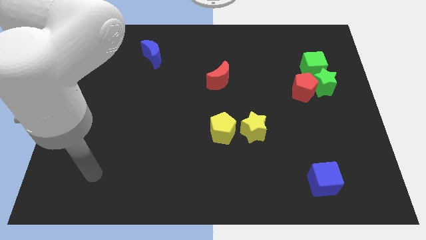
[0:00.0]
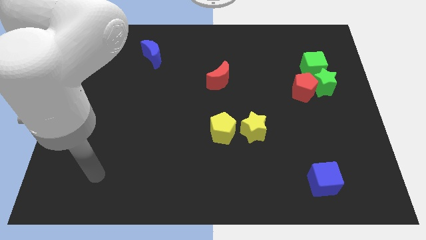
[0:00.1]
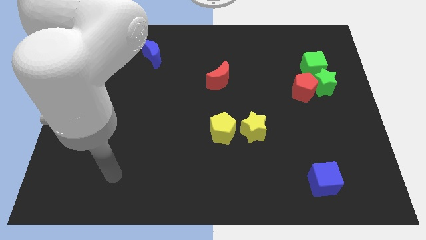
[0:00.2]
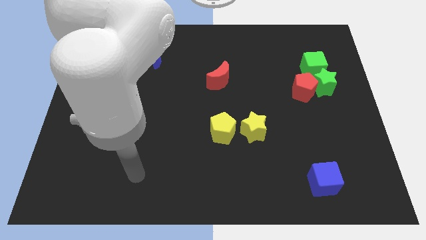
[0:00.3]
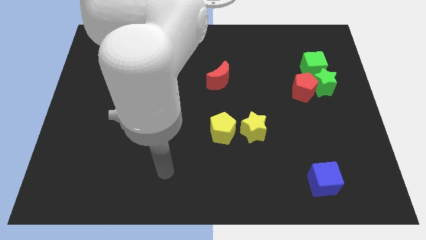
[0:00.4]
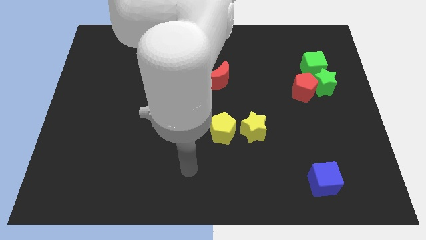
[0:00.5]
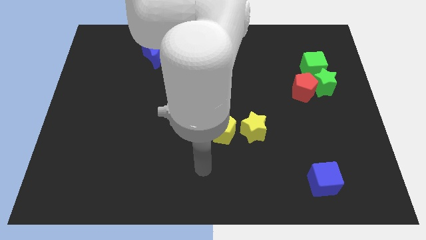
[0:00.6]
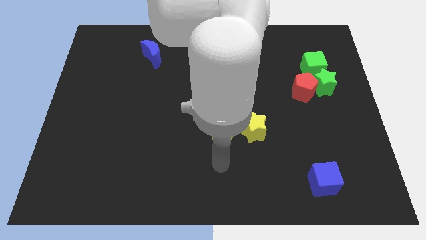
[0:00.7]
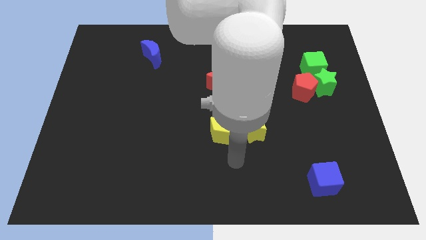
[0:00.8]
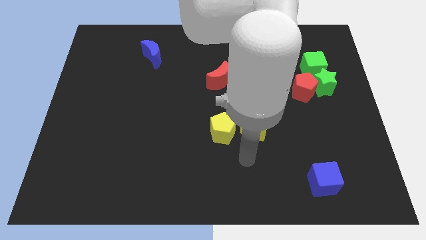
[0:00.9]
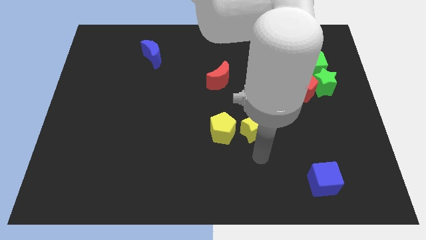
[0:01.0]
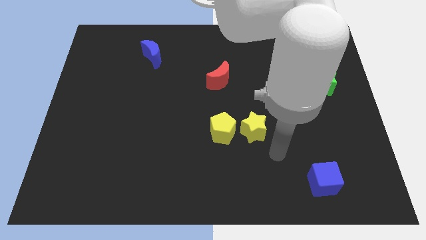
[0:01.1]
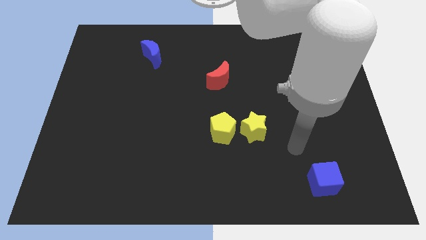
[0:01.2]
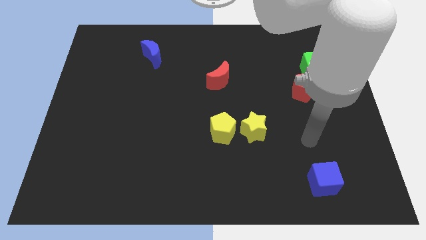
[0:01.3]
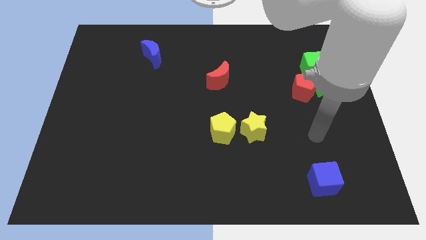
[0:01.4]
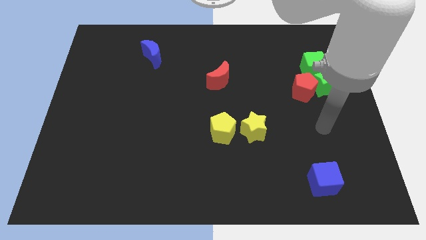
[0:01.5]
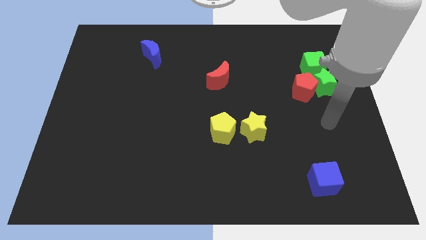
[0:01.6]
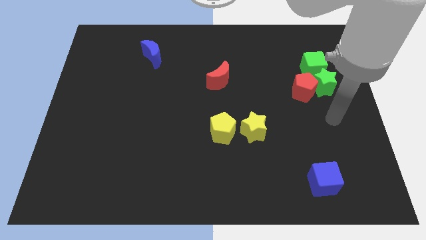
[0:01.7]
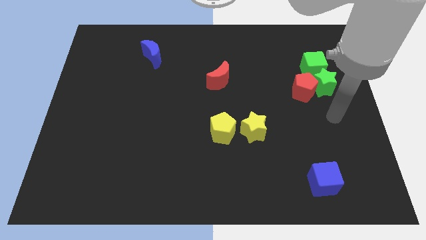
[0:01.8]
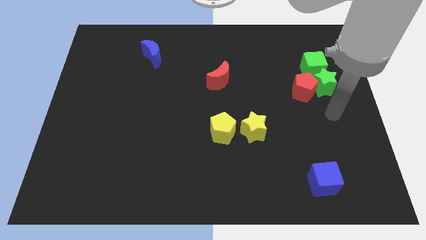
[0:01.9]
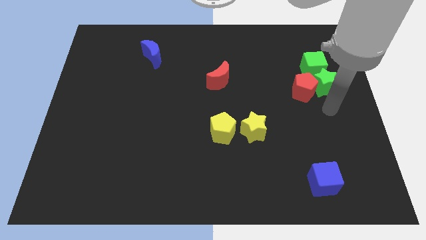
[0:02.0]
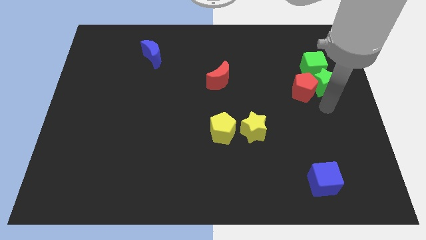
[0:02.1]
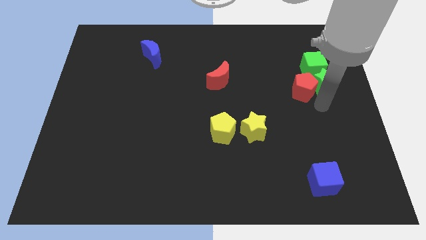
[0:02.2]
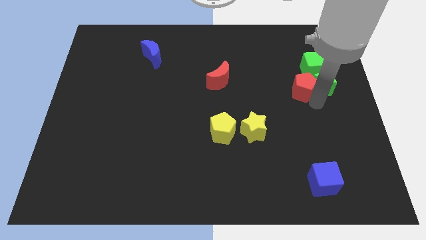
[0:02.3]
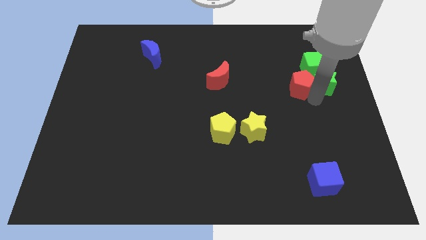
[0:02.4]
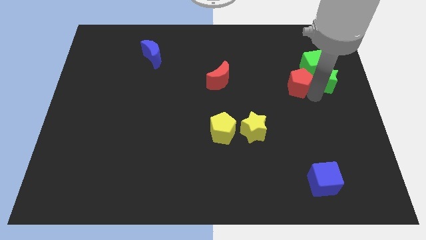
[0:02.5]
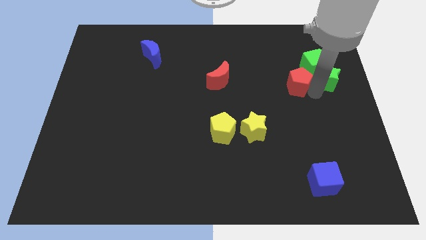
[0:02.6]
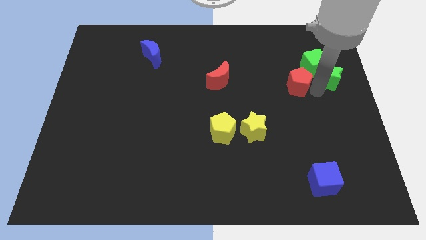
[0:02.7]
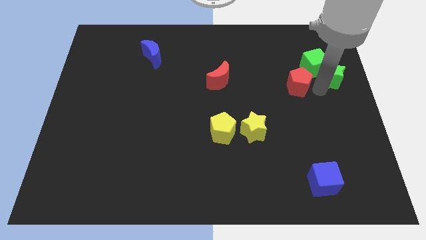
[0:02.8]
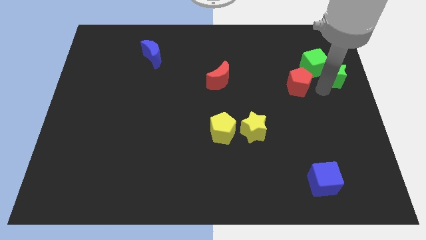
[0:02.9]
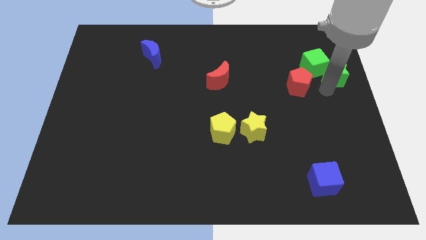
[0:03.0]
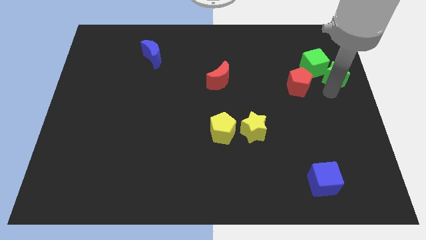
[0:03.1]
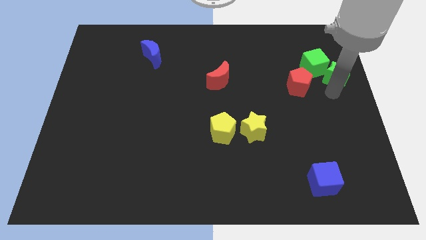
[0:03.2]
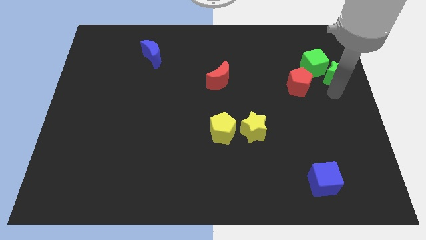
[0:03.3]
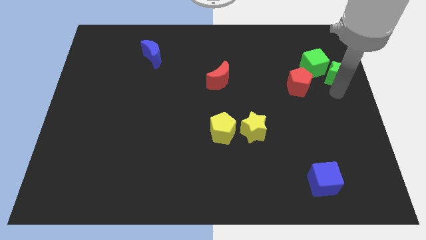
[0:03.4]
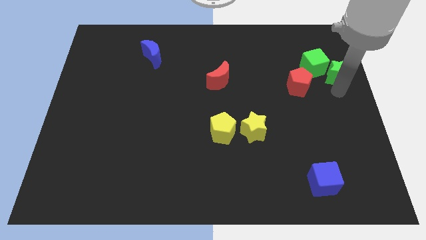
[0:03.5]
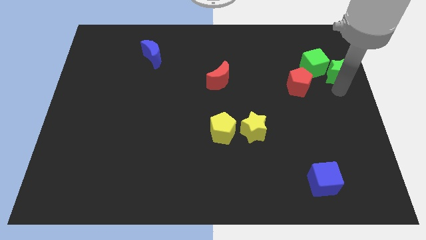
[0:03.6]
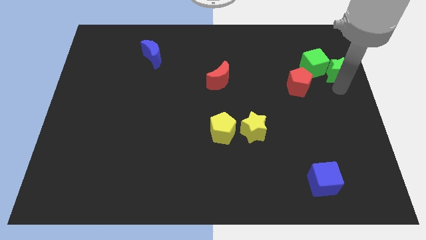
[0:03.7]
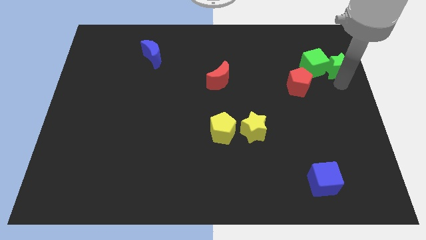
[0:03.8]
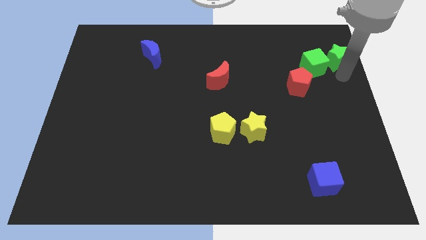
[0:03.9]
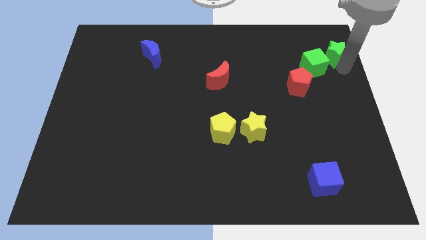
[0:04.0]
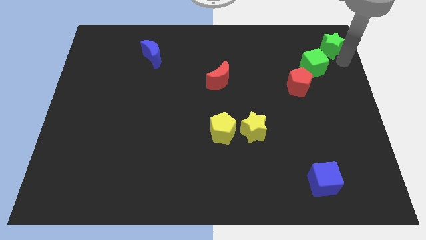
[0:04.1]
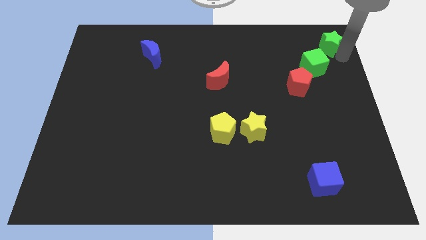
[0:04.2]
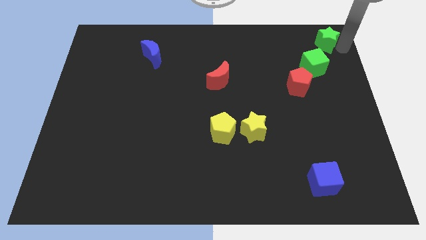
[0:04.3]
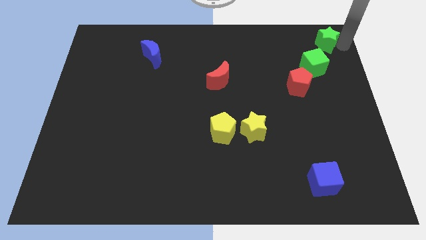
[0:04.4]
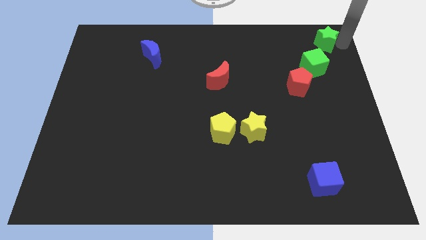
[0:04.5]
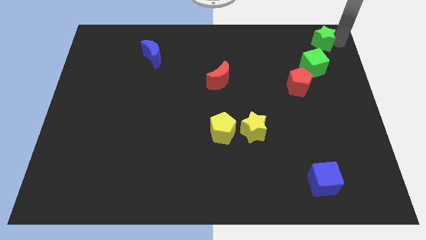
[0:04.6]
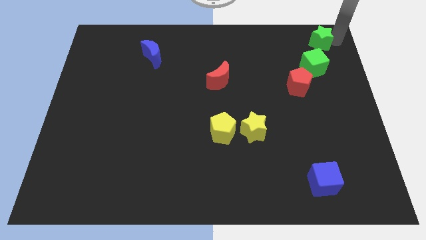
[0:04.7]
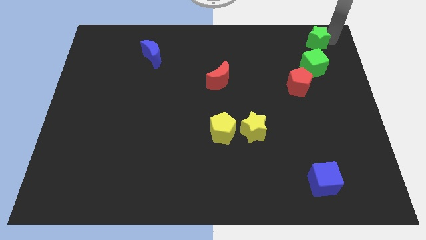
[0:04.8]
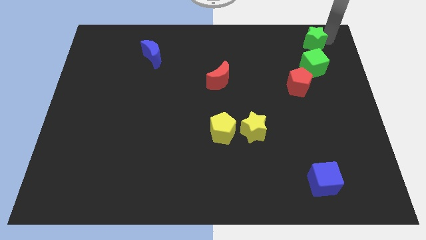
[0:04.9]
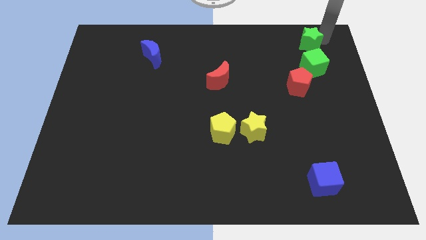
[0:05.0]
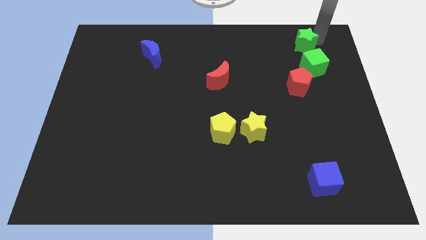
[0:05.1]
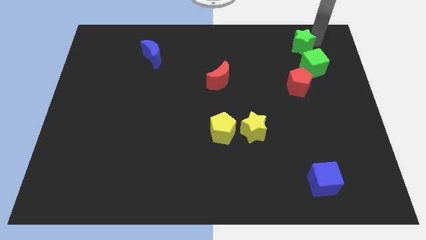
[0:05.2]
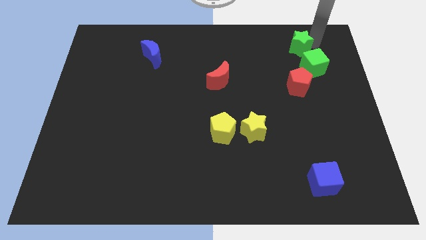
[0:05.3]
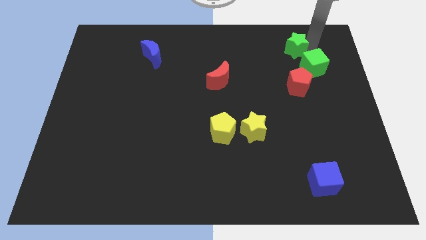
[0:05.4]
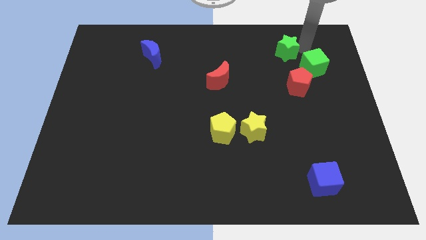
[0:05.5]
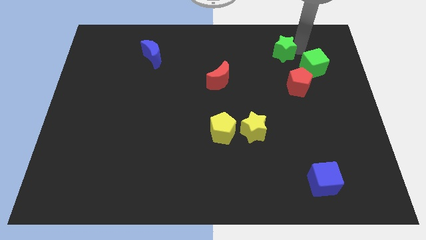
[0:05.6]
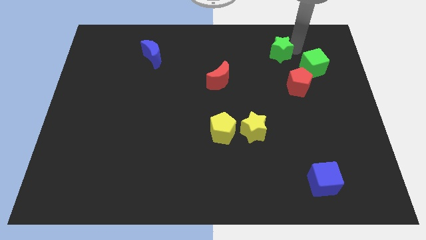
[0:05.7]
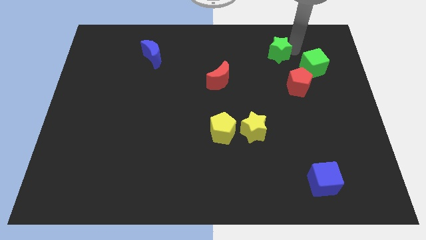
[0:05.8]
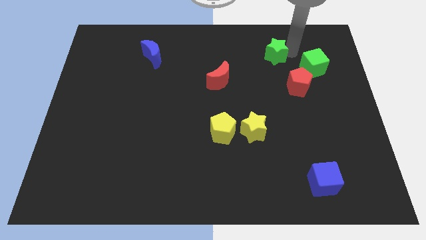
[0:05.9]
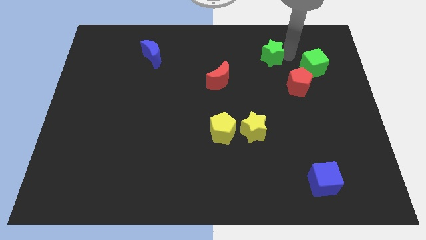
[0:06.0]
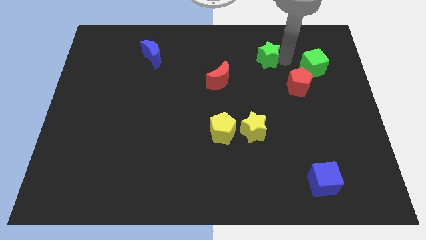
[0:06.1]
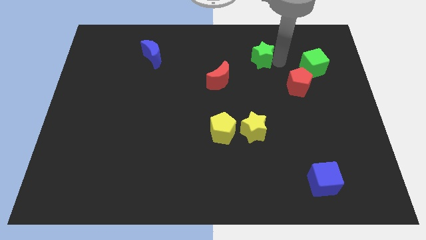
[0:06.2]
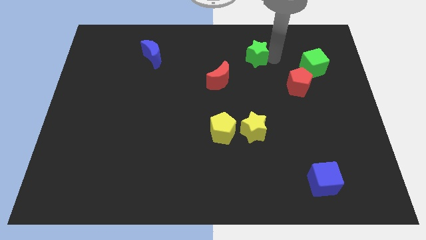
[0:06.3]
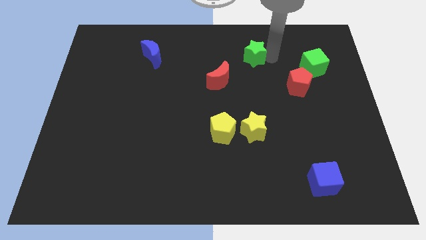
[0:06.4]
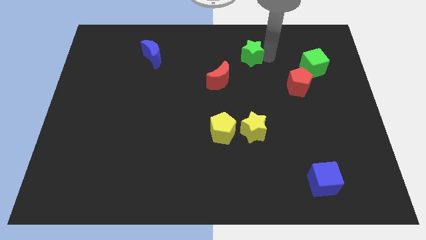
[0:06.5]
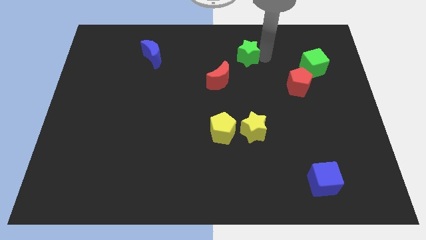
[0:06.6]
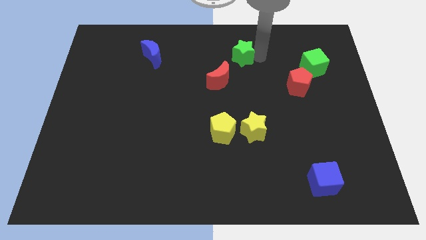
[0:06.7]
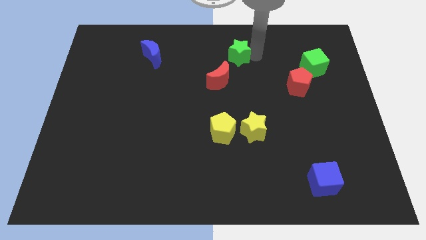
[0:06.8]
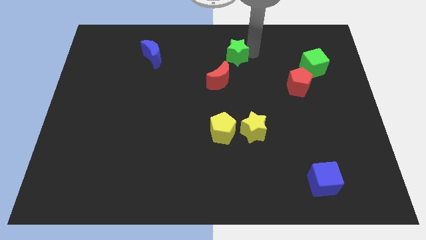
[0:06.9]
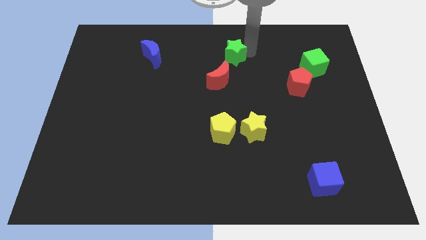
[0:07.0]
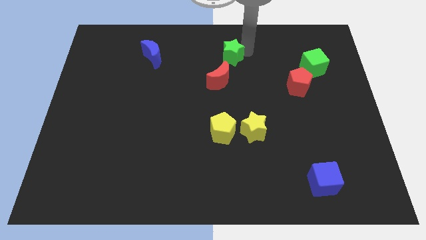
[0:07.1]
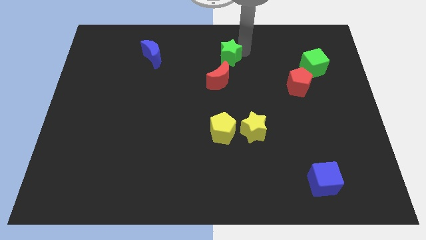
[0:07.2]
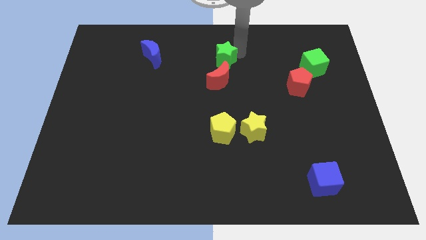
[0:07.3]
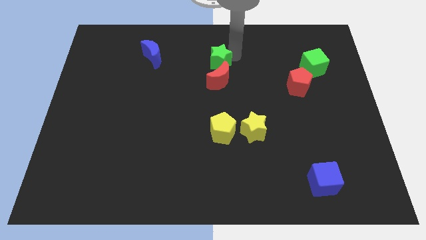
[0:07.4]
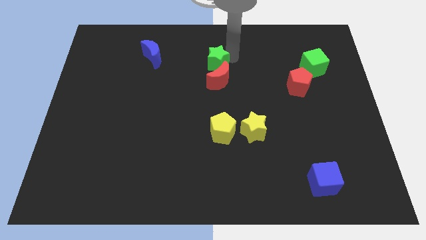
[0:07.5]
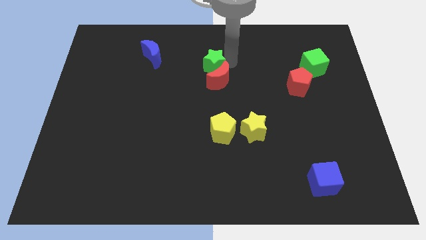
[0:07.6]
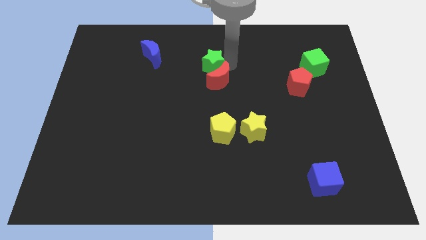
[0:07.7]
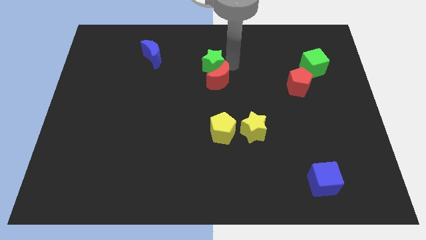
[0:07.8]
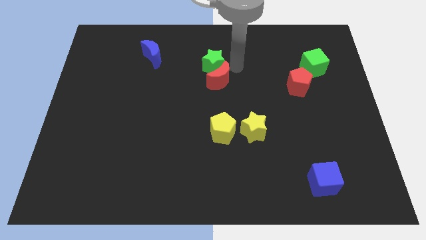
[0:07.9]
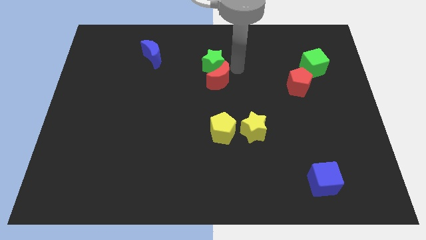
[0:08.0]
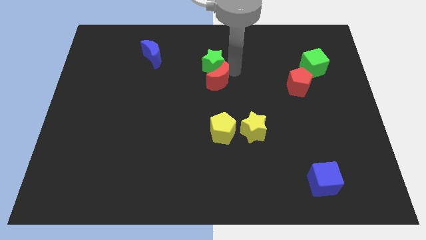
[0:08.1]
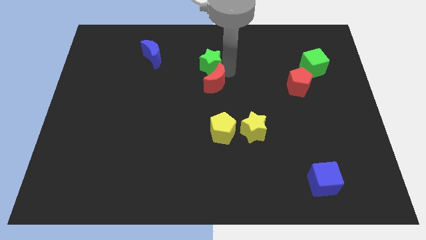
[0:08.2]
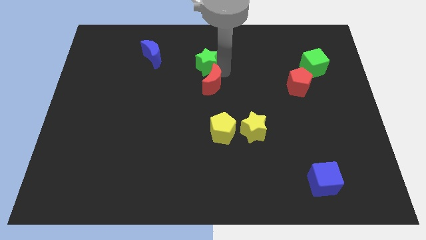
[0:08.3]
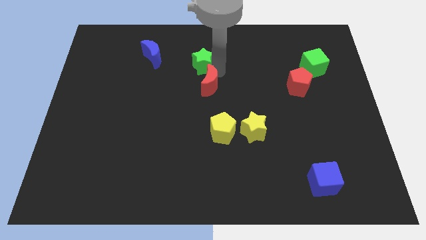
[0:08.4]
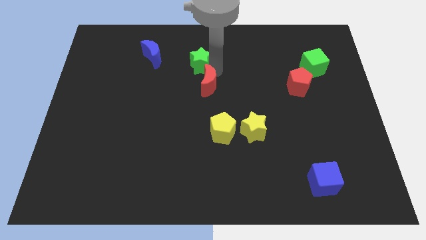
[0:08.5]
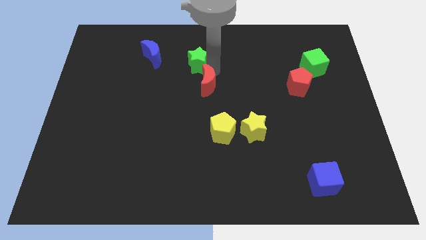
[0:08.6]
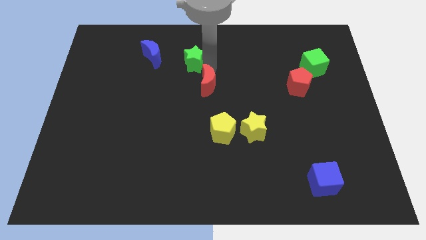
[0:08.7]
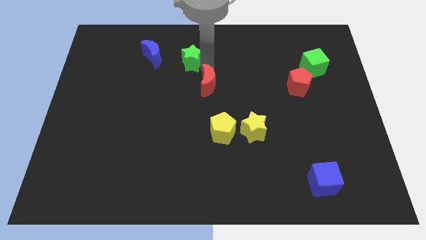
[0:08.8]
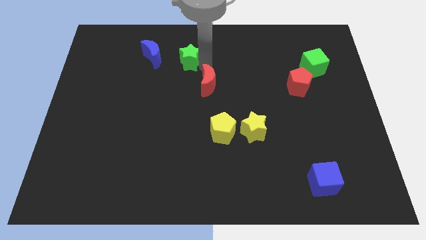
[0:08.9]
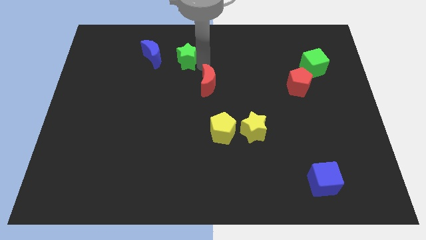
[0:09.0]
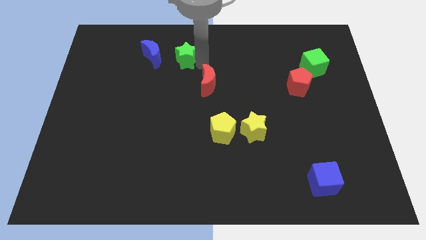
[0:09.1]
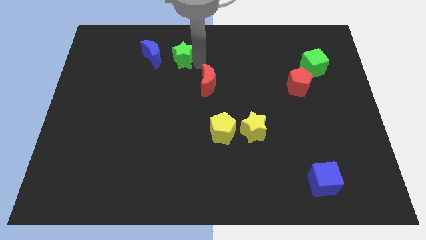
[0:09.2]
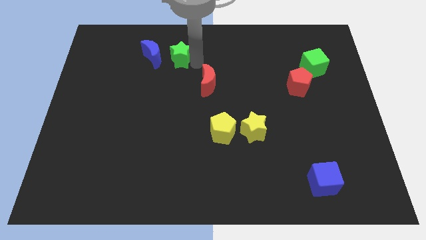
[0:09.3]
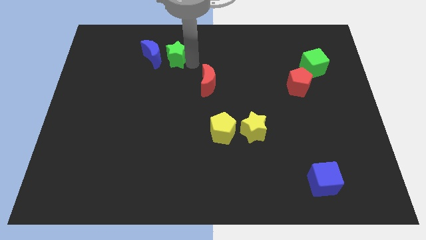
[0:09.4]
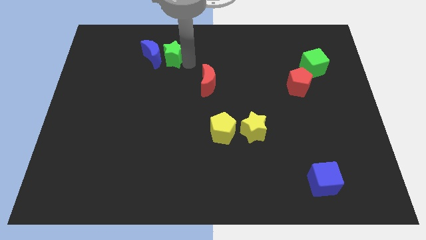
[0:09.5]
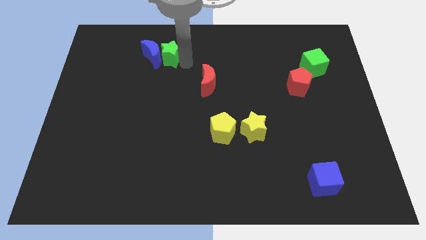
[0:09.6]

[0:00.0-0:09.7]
push the green star to the blue moon
